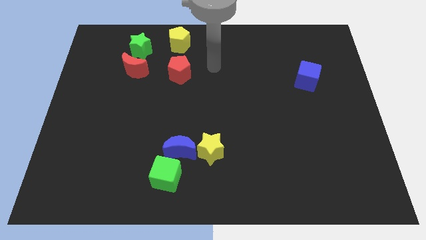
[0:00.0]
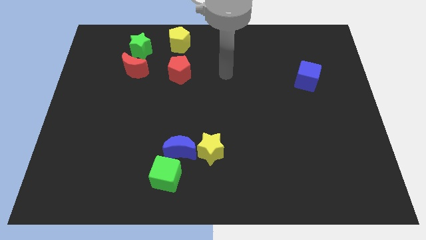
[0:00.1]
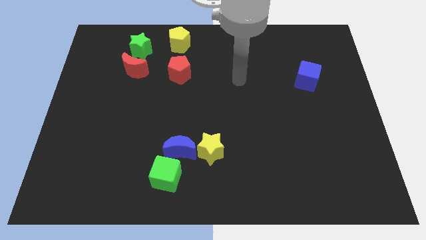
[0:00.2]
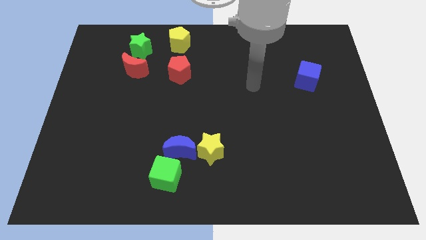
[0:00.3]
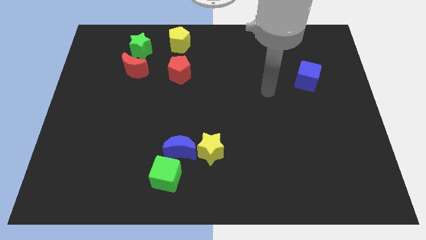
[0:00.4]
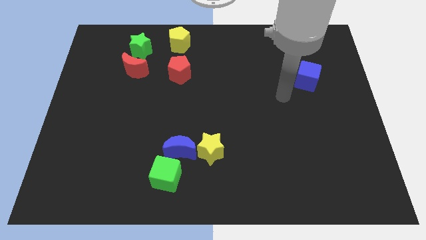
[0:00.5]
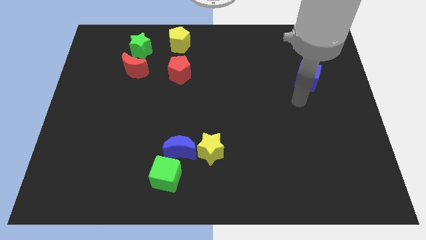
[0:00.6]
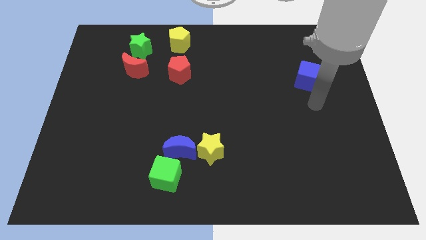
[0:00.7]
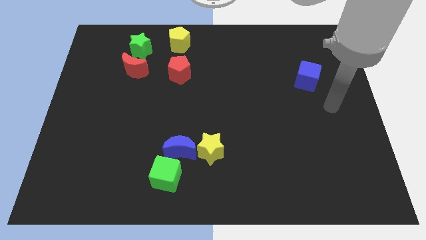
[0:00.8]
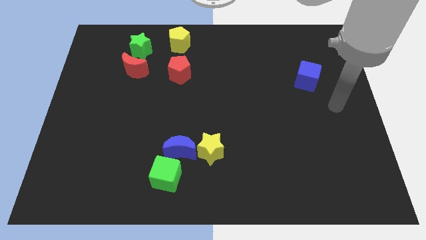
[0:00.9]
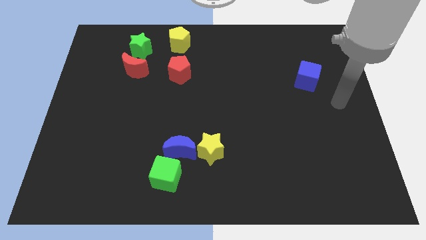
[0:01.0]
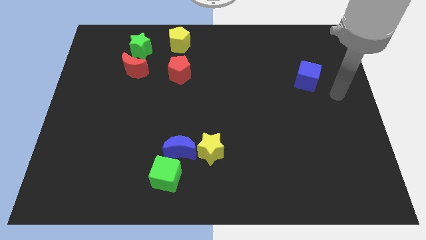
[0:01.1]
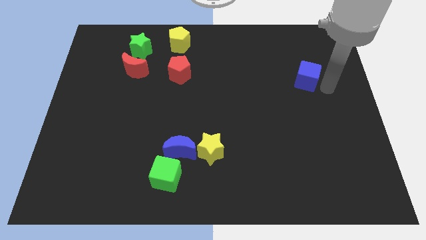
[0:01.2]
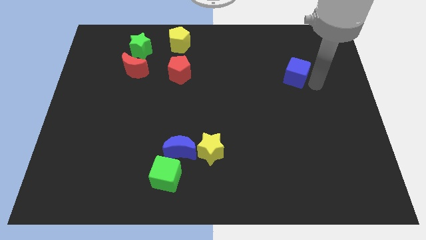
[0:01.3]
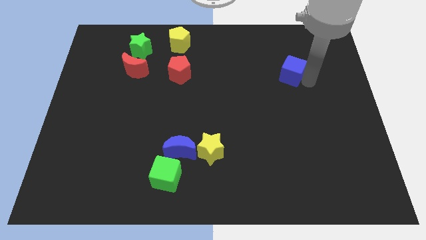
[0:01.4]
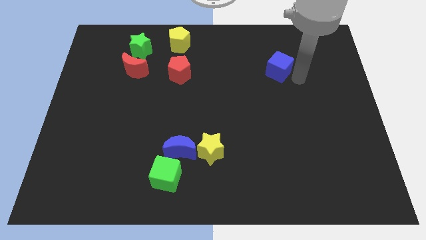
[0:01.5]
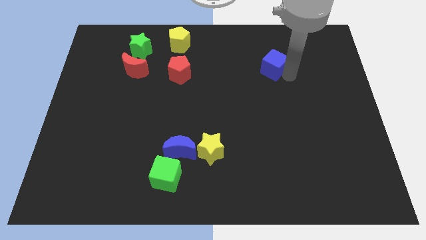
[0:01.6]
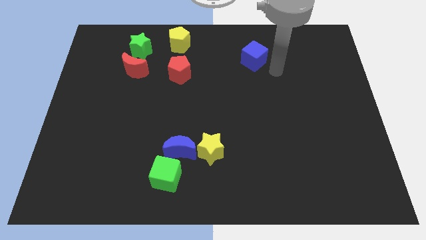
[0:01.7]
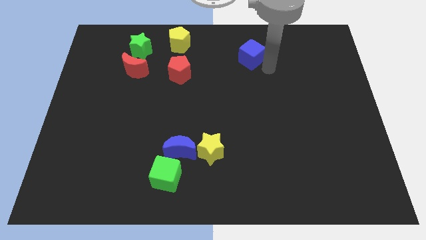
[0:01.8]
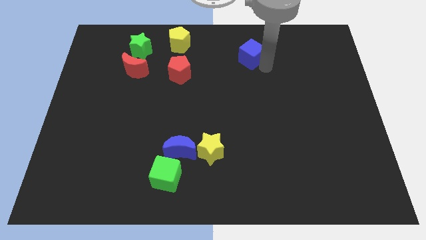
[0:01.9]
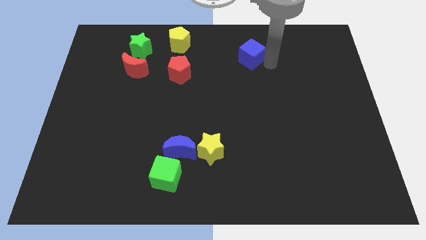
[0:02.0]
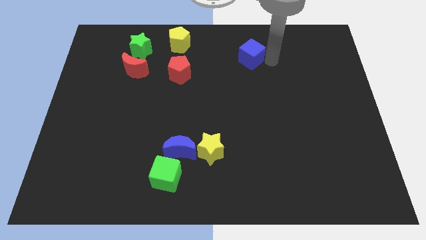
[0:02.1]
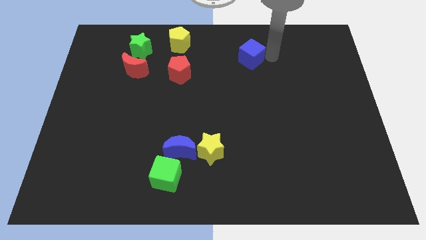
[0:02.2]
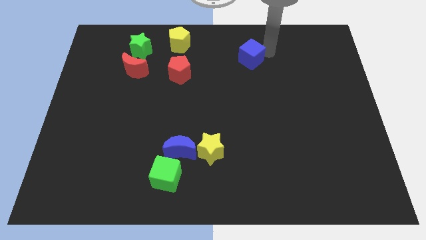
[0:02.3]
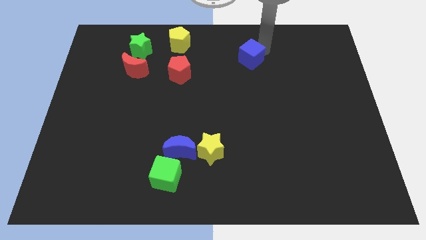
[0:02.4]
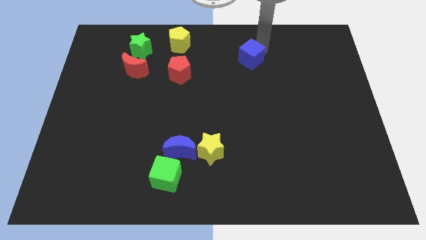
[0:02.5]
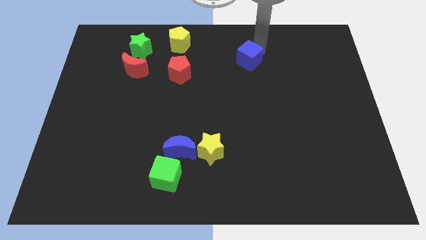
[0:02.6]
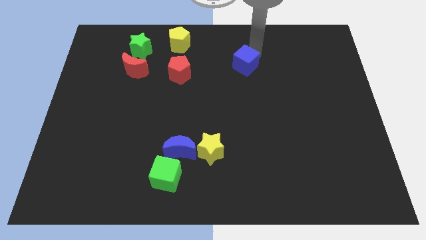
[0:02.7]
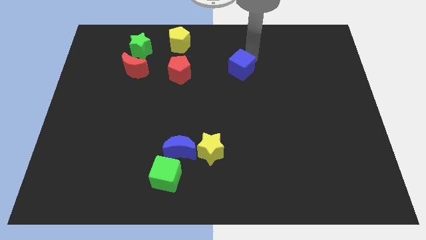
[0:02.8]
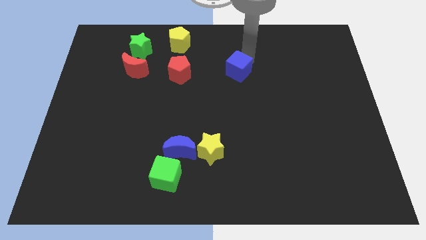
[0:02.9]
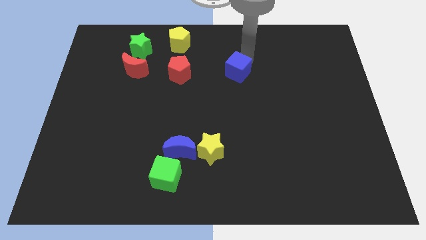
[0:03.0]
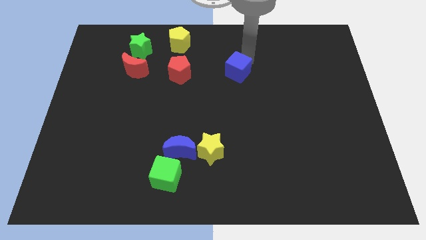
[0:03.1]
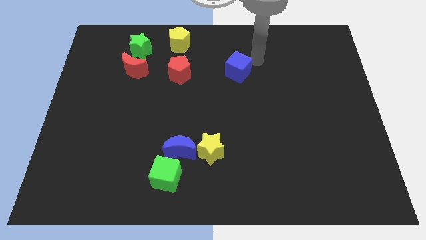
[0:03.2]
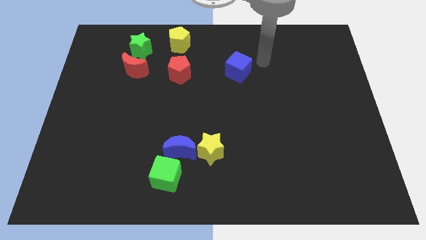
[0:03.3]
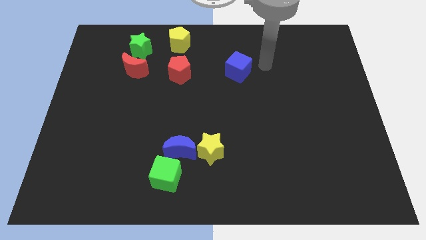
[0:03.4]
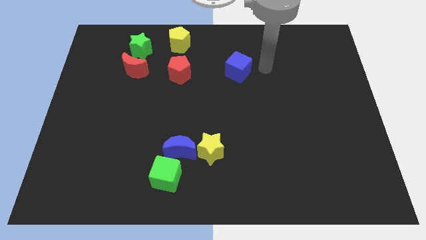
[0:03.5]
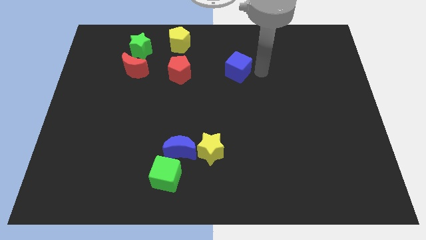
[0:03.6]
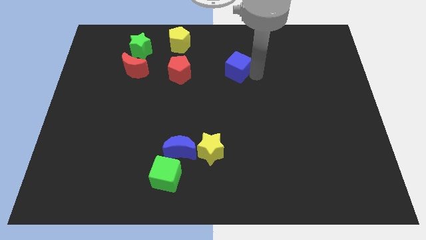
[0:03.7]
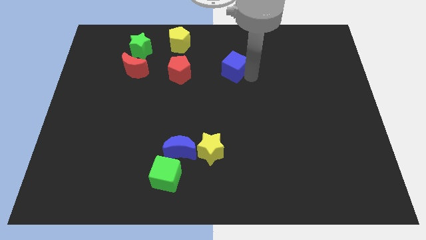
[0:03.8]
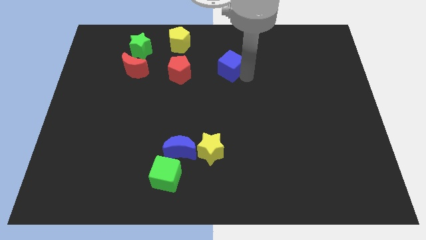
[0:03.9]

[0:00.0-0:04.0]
place the blue cube right to the red pentagon

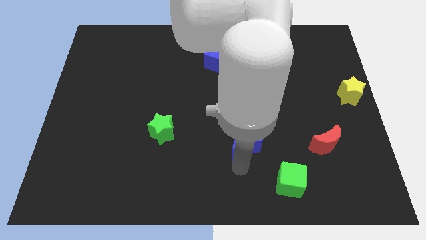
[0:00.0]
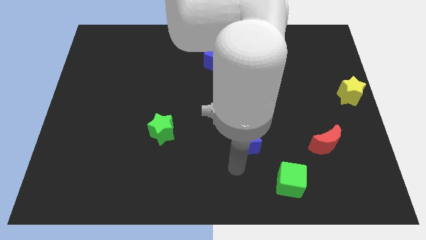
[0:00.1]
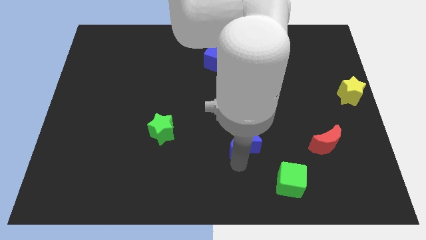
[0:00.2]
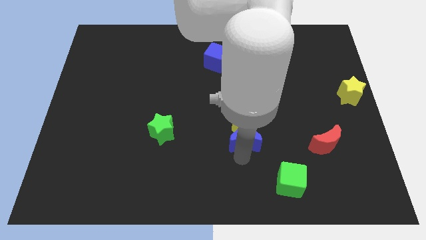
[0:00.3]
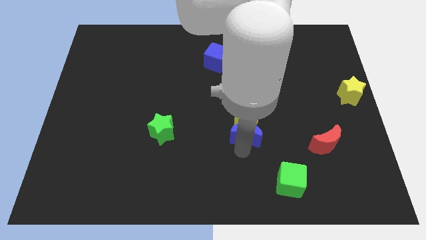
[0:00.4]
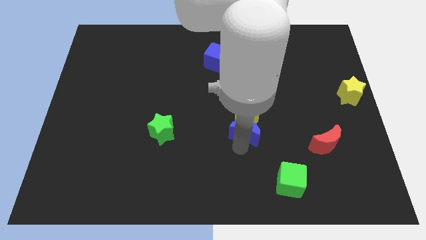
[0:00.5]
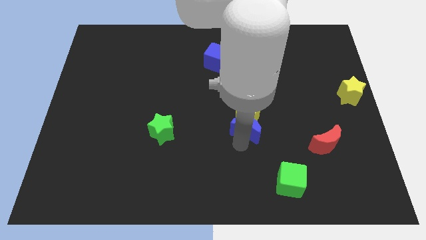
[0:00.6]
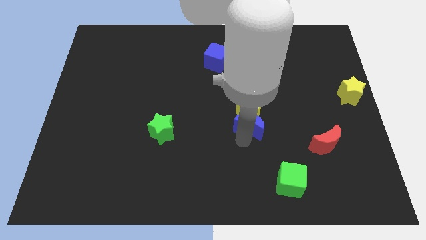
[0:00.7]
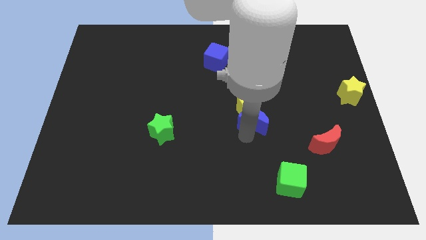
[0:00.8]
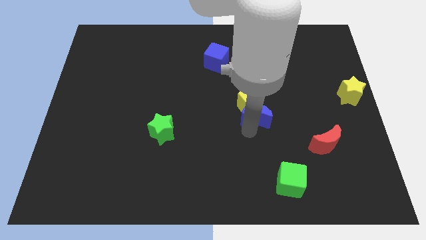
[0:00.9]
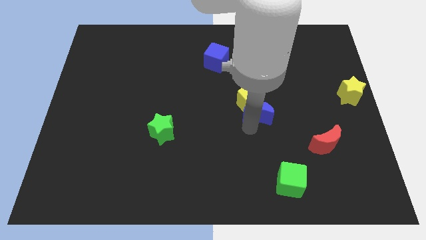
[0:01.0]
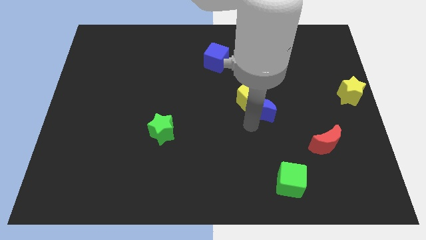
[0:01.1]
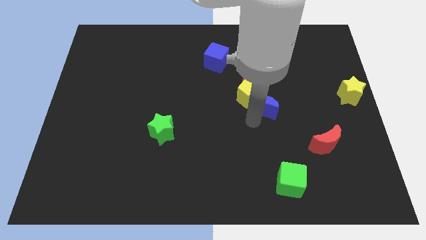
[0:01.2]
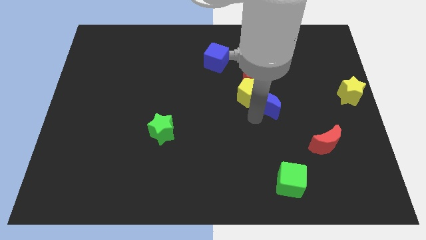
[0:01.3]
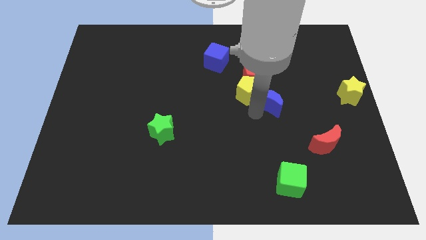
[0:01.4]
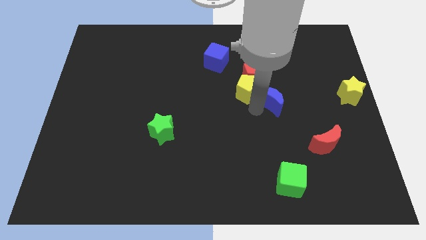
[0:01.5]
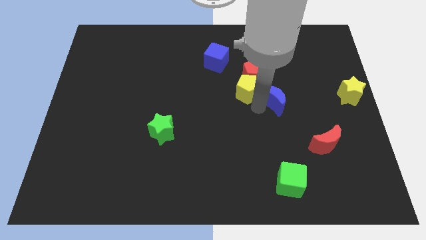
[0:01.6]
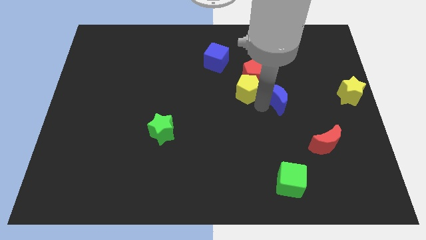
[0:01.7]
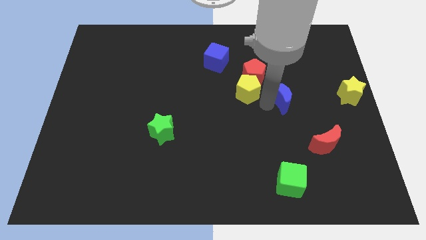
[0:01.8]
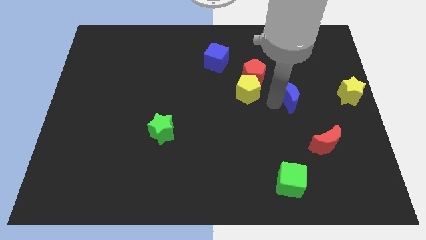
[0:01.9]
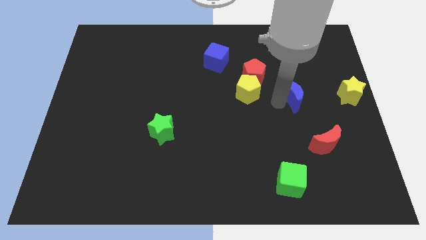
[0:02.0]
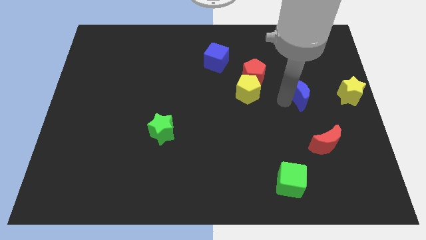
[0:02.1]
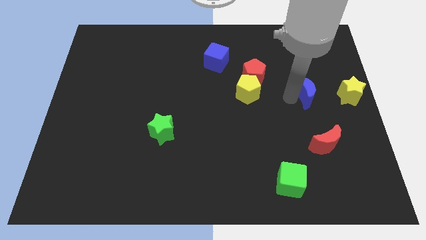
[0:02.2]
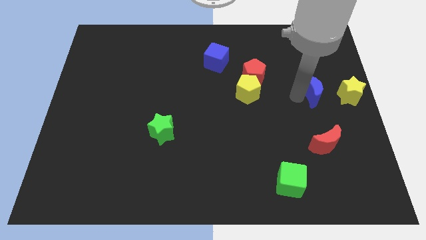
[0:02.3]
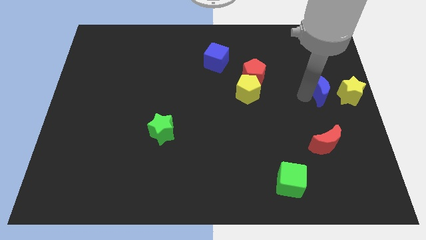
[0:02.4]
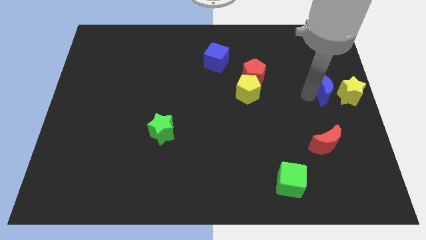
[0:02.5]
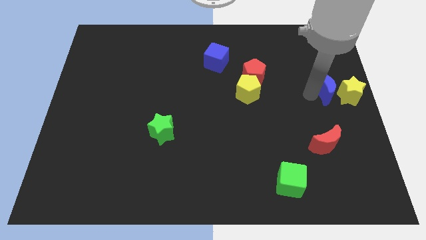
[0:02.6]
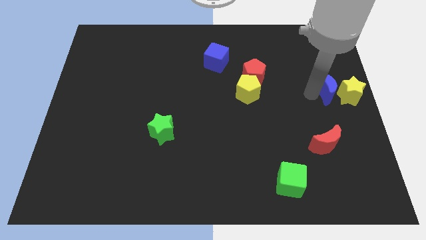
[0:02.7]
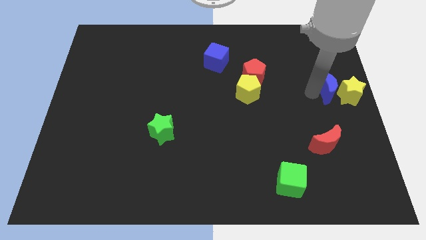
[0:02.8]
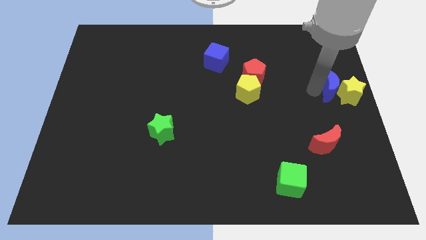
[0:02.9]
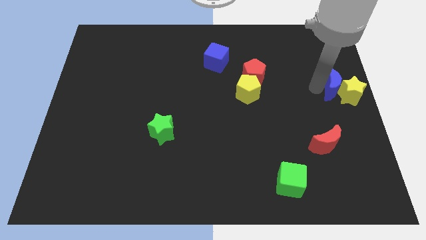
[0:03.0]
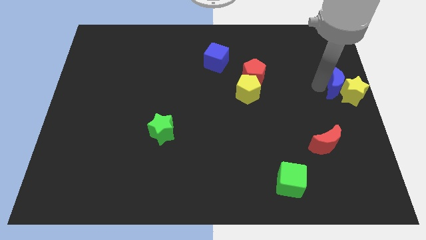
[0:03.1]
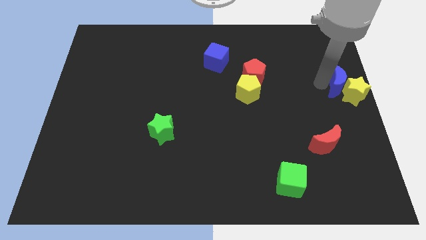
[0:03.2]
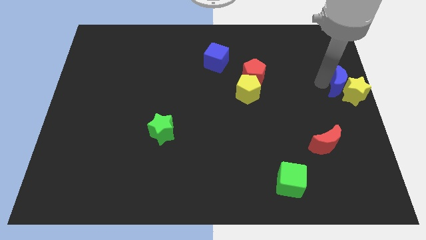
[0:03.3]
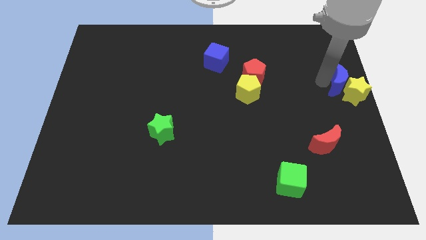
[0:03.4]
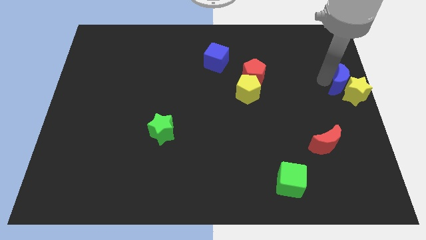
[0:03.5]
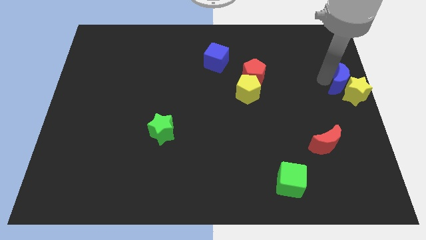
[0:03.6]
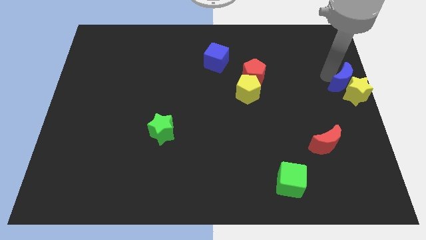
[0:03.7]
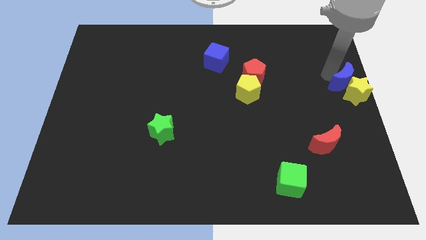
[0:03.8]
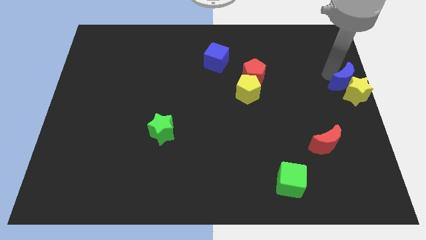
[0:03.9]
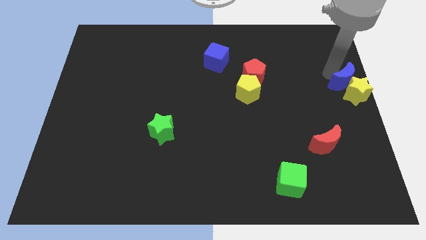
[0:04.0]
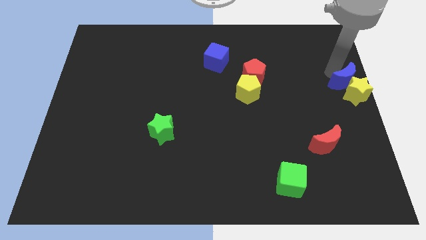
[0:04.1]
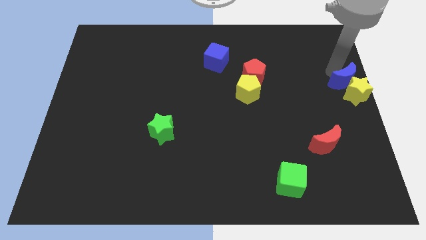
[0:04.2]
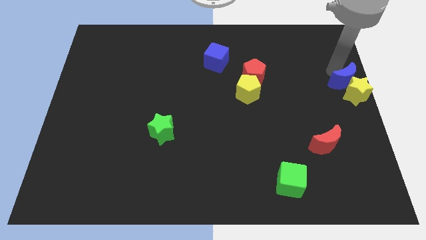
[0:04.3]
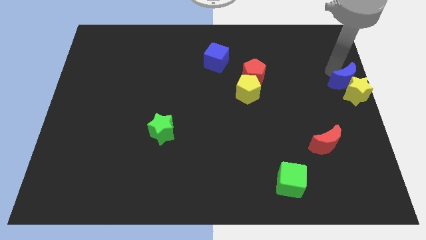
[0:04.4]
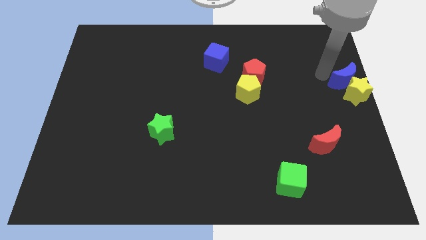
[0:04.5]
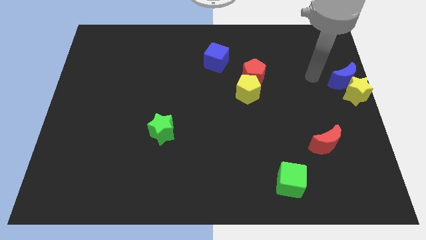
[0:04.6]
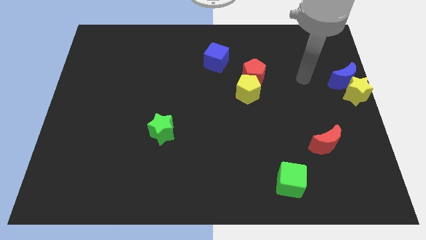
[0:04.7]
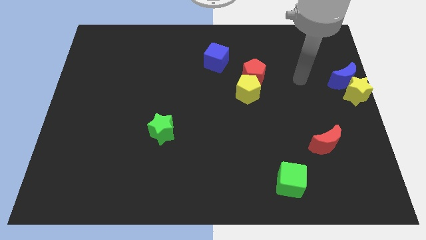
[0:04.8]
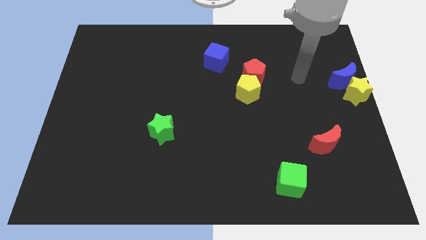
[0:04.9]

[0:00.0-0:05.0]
push the blue crescent towards the yellow star

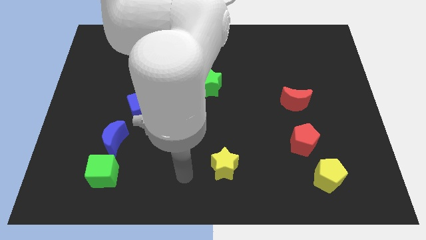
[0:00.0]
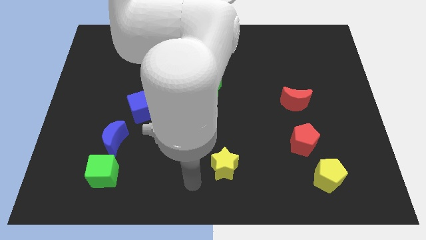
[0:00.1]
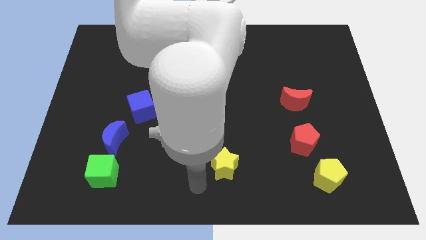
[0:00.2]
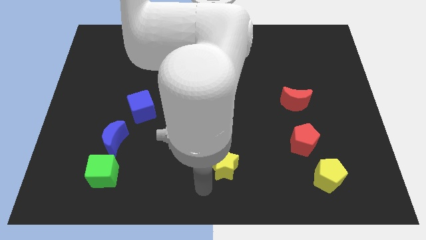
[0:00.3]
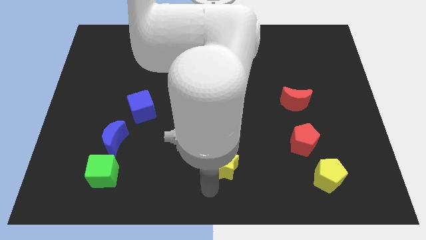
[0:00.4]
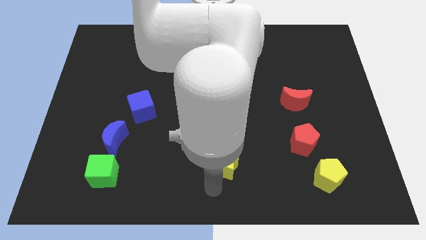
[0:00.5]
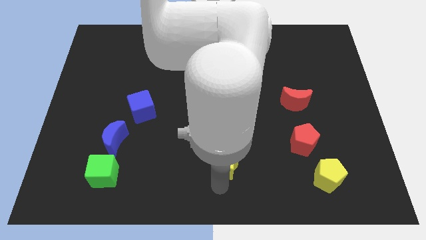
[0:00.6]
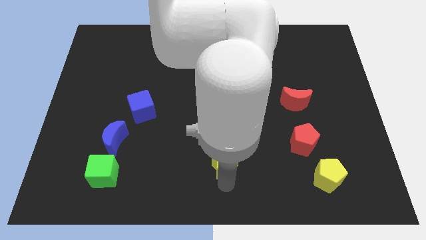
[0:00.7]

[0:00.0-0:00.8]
put your arm below yellow star
